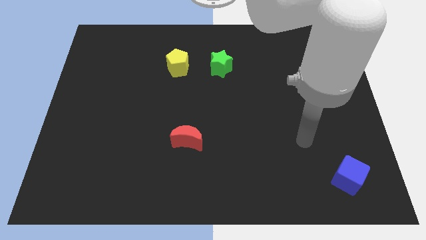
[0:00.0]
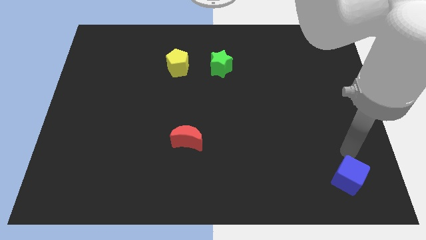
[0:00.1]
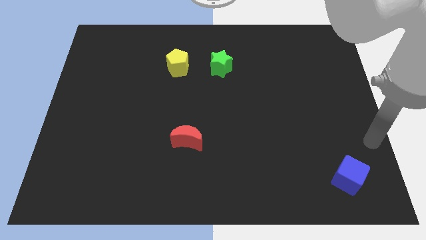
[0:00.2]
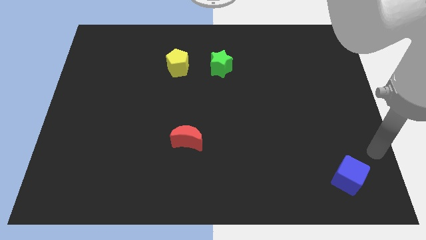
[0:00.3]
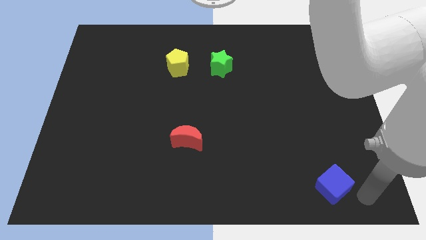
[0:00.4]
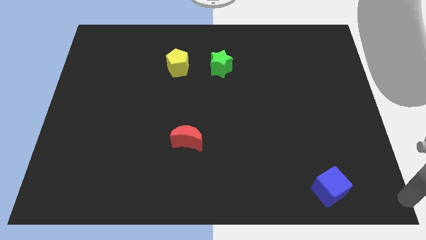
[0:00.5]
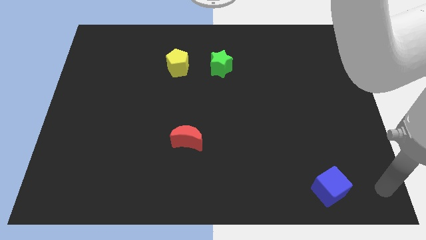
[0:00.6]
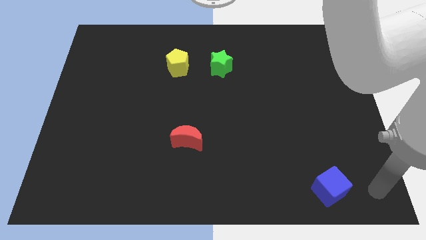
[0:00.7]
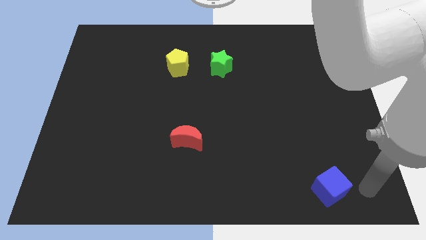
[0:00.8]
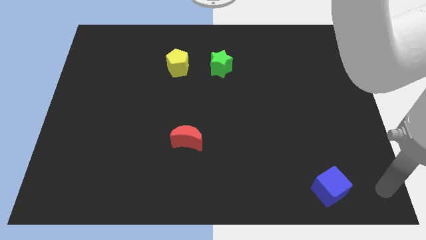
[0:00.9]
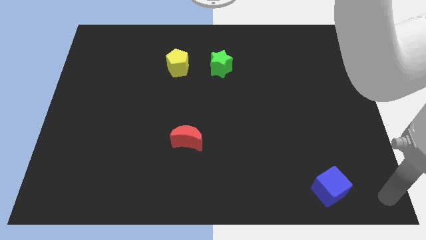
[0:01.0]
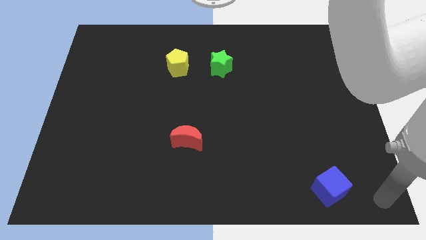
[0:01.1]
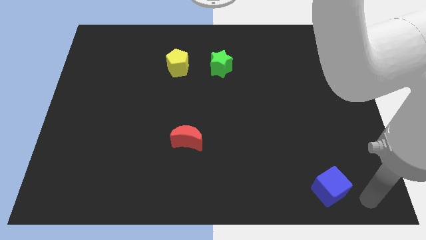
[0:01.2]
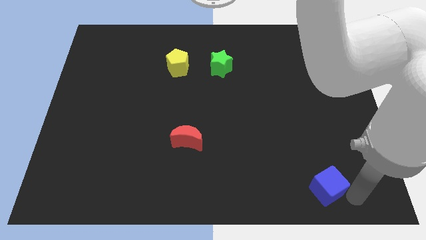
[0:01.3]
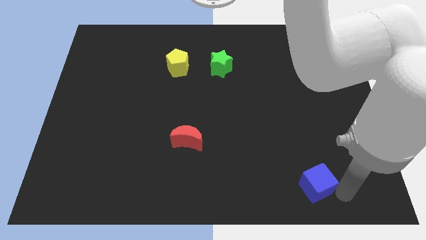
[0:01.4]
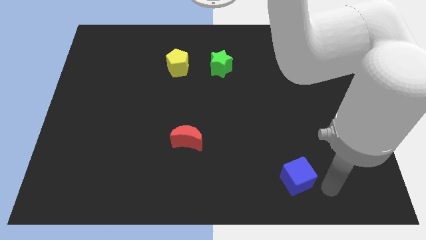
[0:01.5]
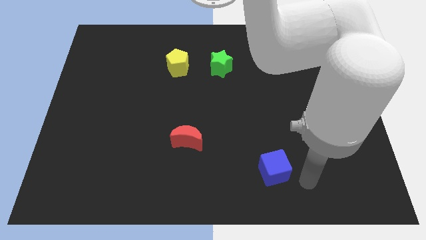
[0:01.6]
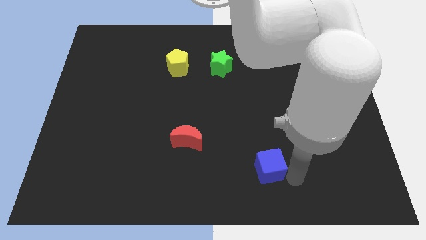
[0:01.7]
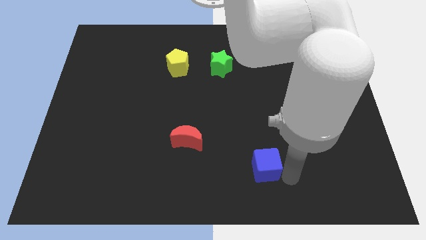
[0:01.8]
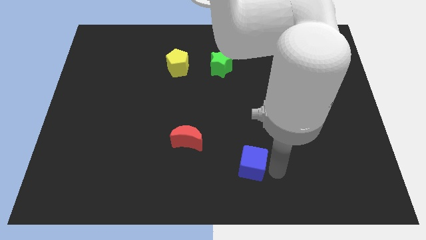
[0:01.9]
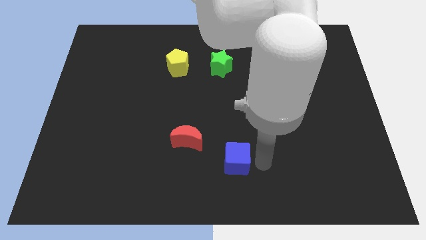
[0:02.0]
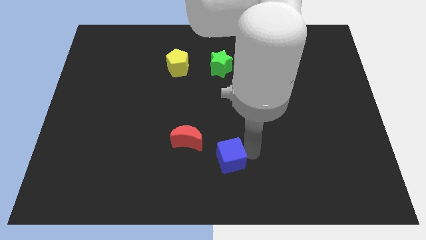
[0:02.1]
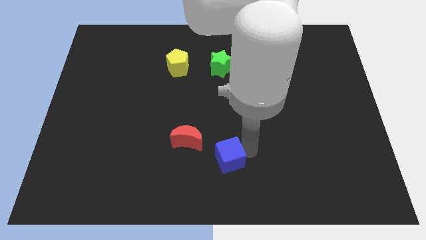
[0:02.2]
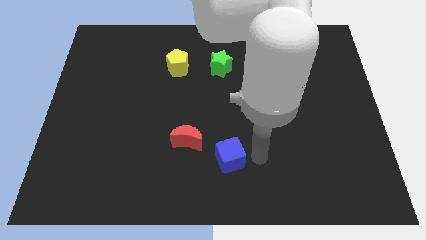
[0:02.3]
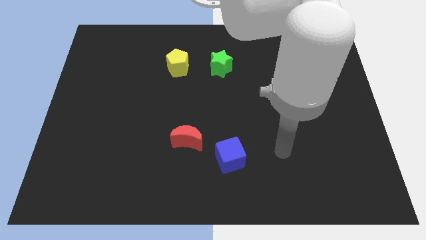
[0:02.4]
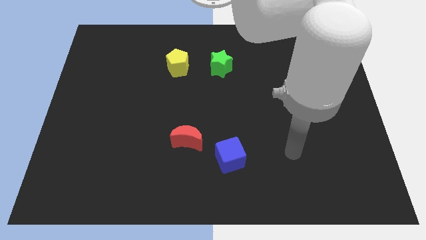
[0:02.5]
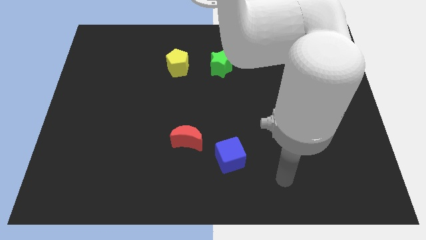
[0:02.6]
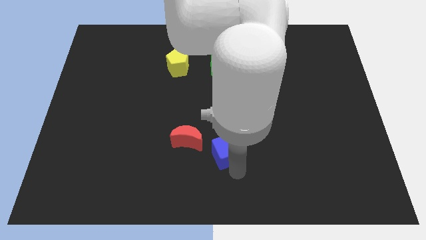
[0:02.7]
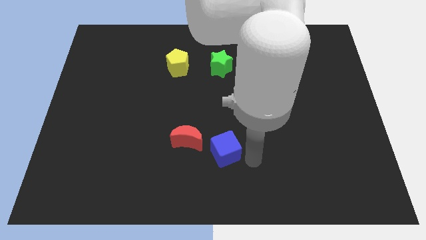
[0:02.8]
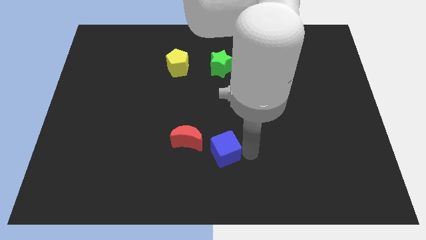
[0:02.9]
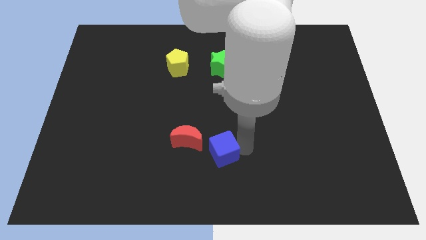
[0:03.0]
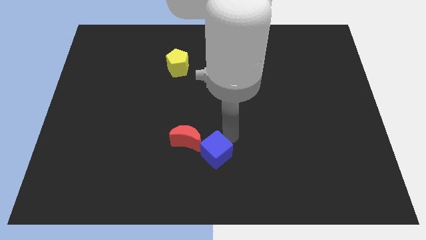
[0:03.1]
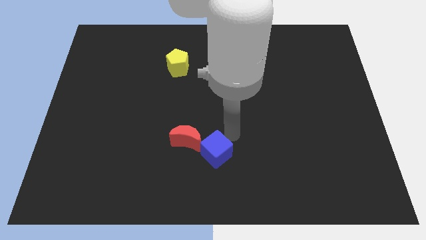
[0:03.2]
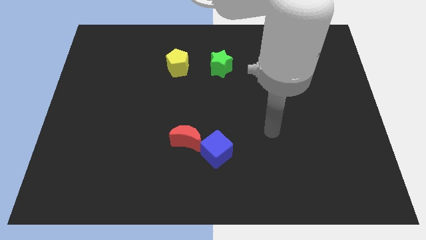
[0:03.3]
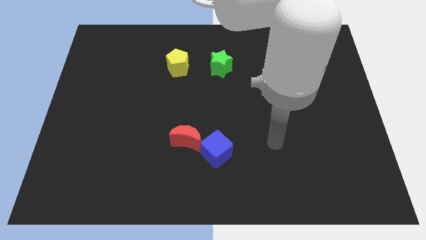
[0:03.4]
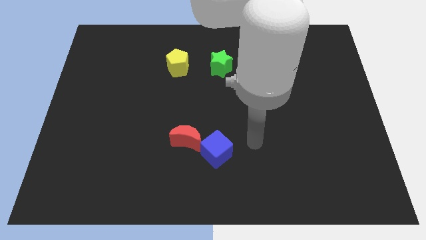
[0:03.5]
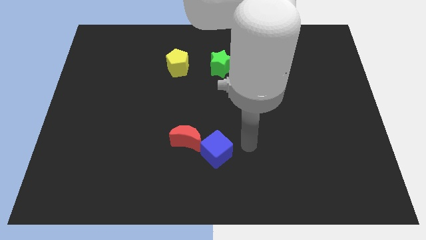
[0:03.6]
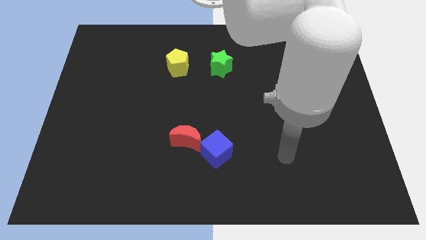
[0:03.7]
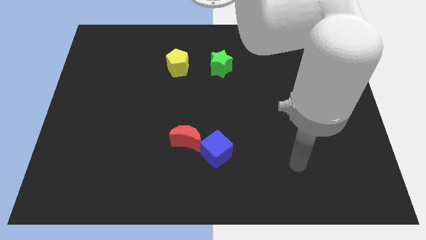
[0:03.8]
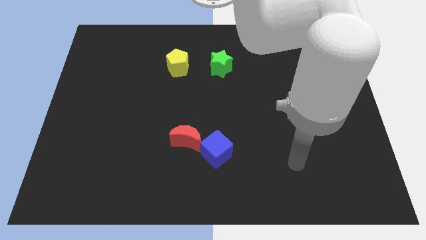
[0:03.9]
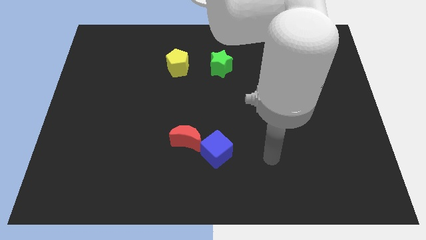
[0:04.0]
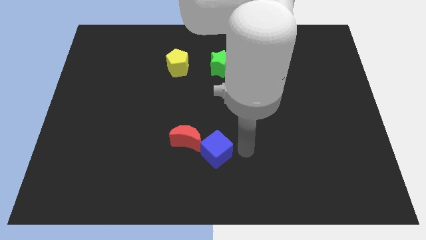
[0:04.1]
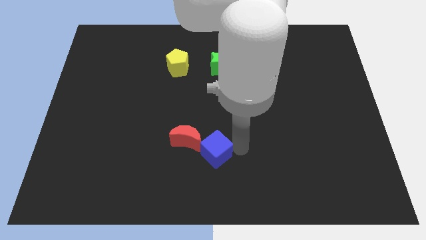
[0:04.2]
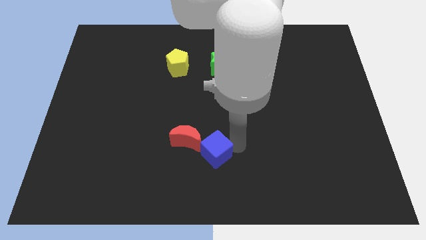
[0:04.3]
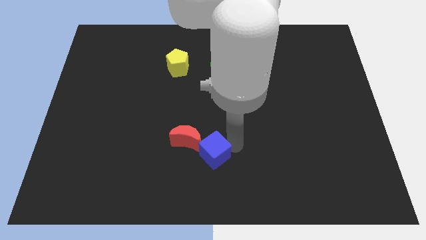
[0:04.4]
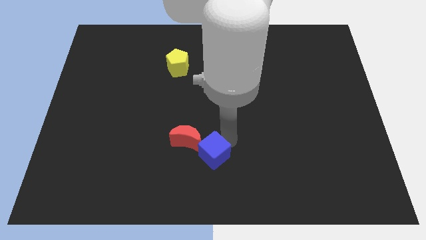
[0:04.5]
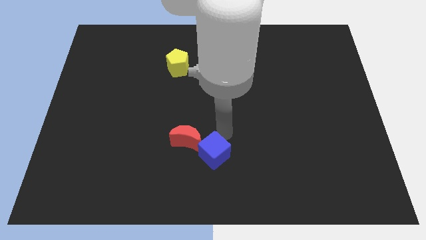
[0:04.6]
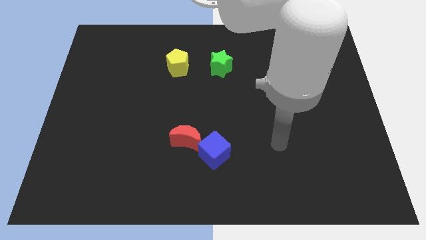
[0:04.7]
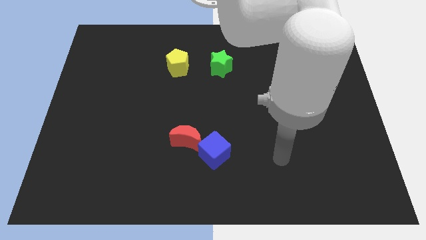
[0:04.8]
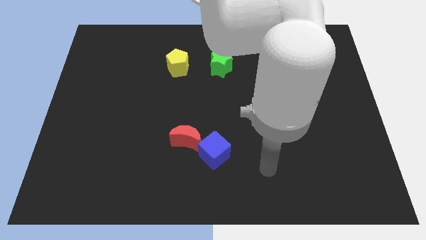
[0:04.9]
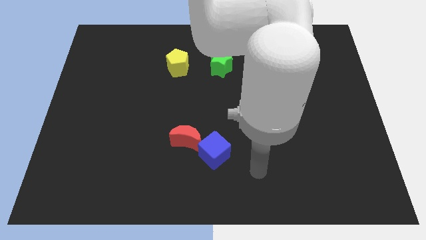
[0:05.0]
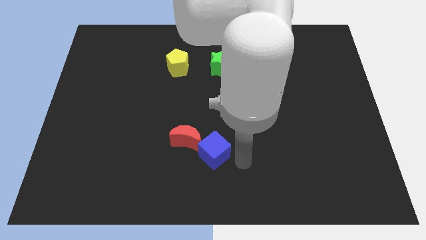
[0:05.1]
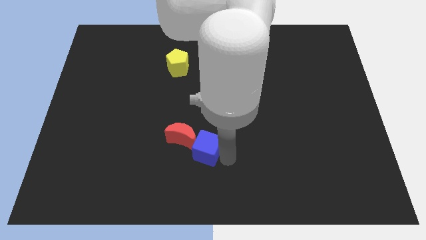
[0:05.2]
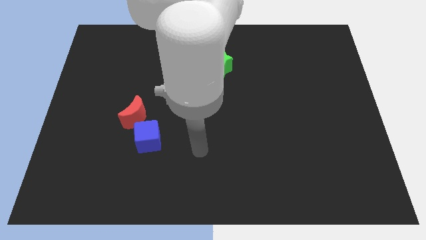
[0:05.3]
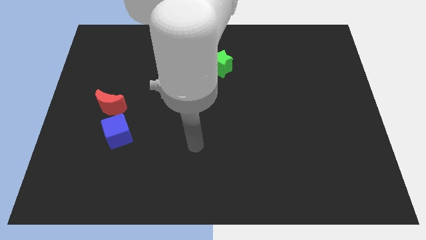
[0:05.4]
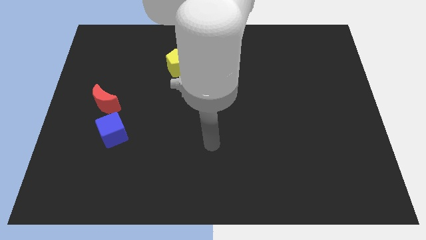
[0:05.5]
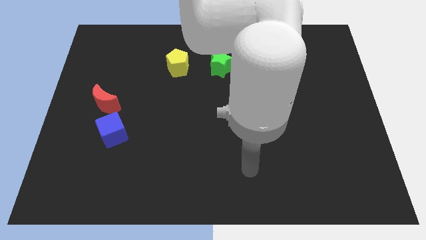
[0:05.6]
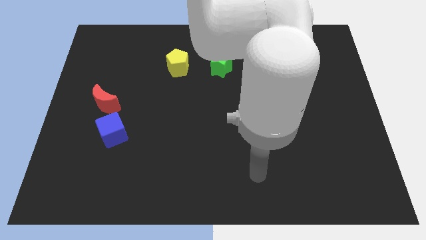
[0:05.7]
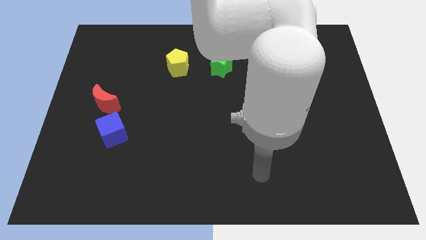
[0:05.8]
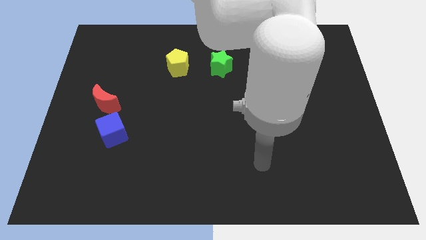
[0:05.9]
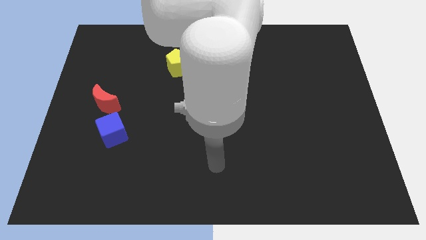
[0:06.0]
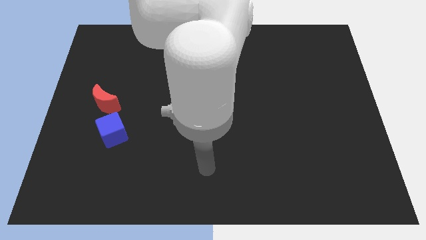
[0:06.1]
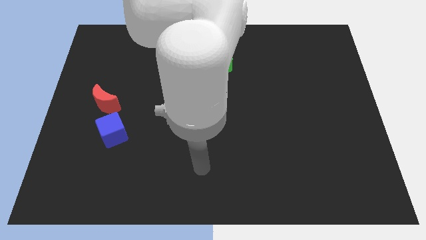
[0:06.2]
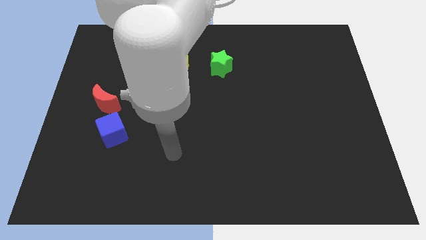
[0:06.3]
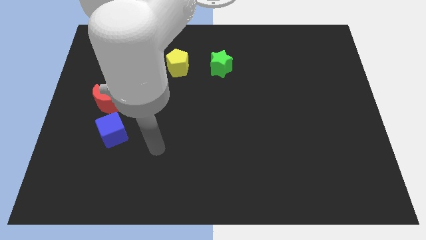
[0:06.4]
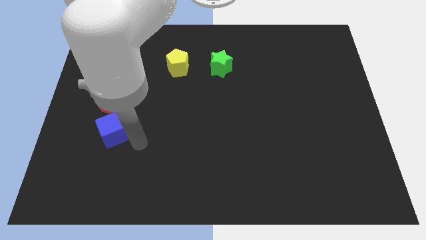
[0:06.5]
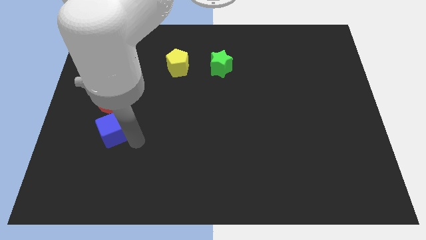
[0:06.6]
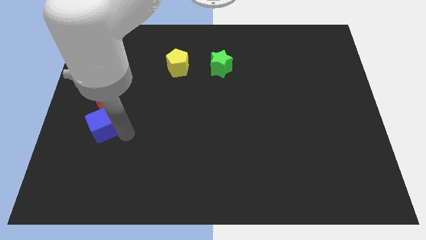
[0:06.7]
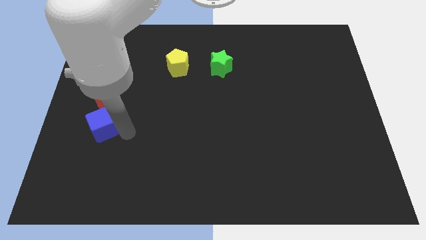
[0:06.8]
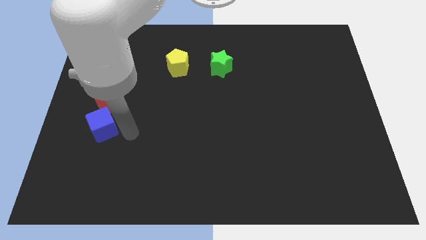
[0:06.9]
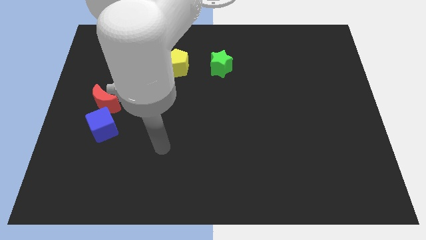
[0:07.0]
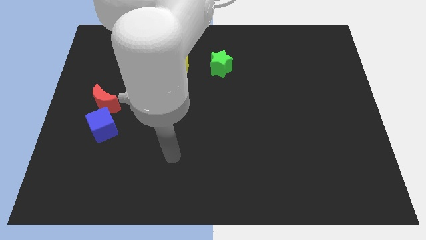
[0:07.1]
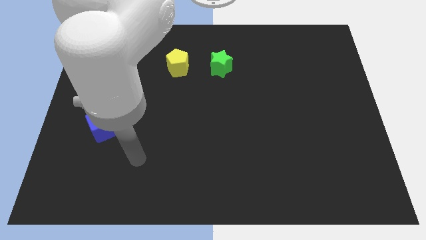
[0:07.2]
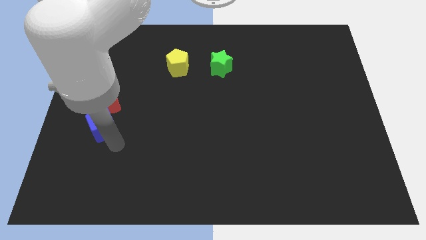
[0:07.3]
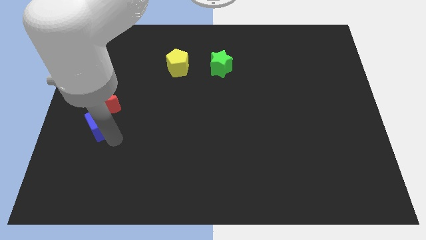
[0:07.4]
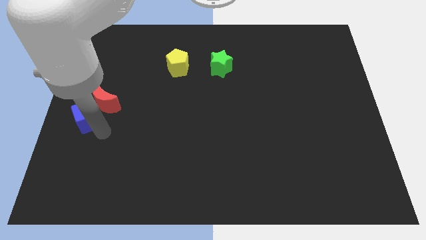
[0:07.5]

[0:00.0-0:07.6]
put the blue block towards the moon

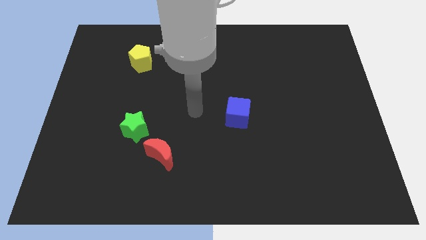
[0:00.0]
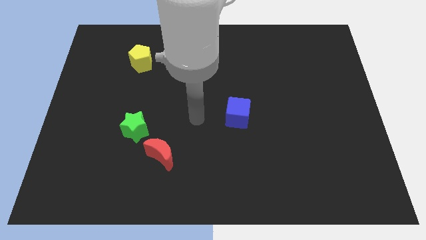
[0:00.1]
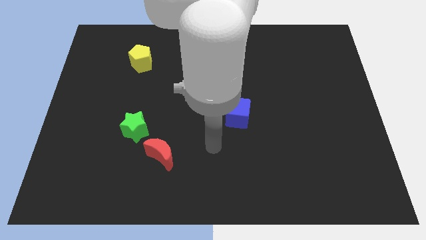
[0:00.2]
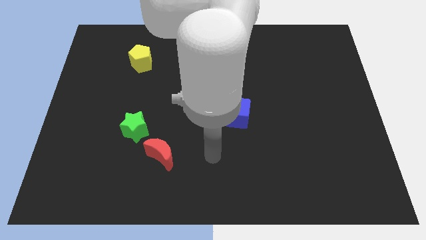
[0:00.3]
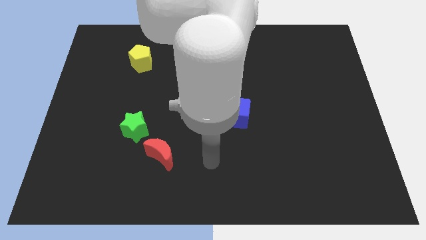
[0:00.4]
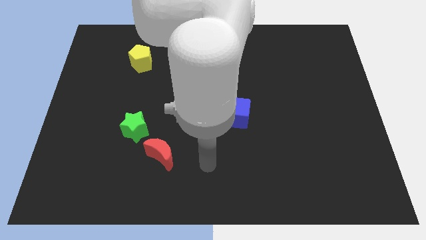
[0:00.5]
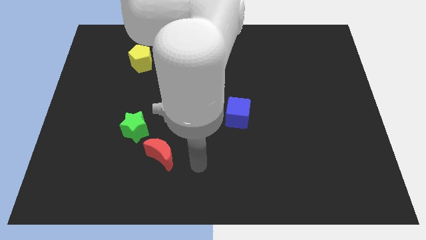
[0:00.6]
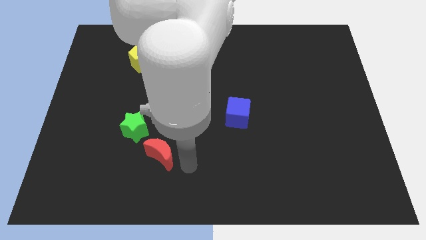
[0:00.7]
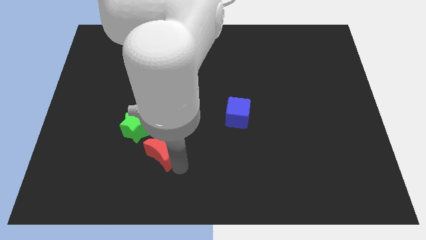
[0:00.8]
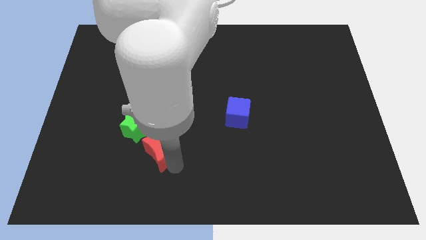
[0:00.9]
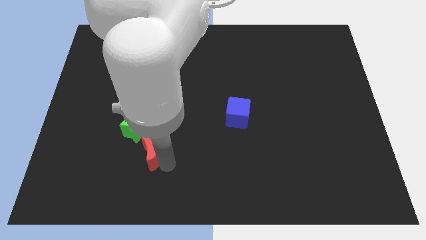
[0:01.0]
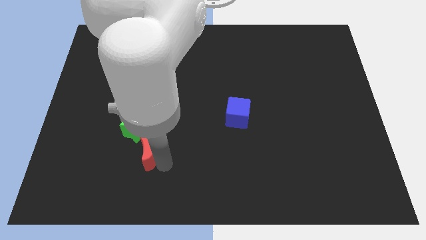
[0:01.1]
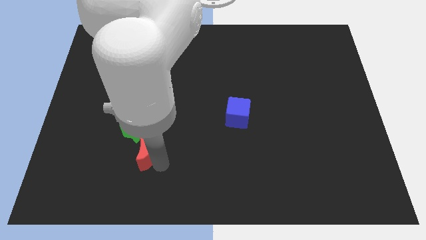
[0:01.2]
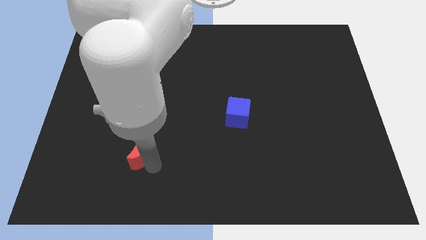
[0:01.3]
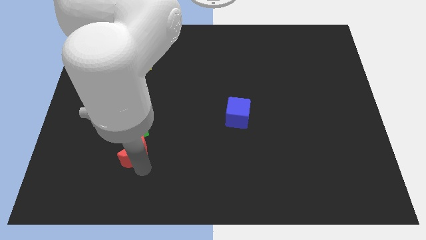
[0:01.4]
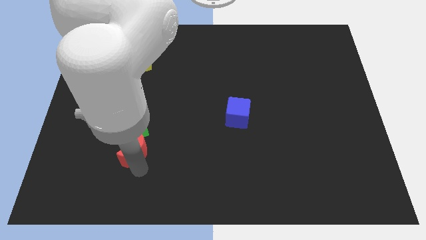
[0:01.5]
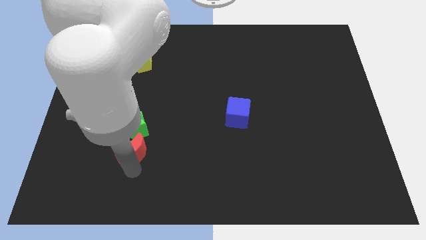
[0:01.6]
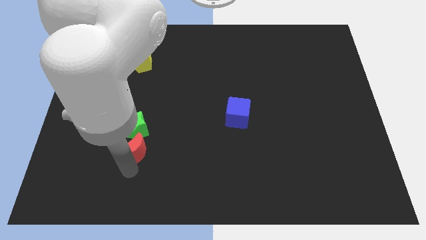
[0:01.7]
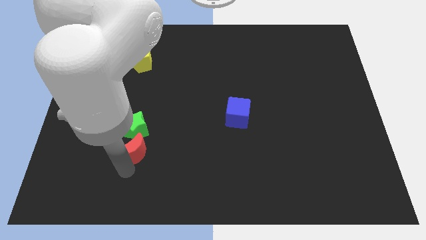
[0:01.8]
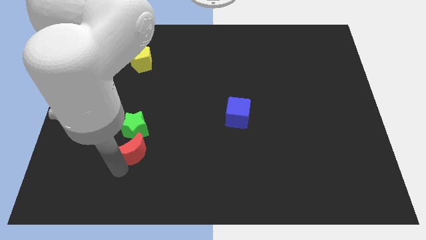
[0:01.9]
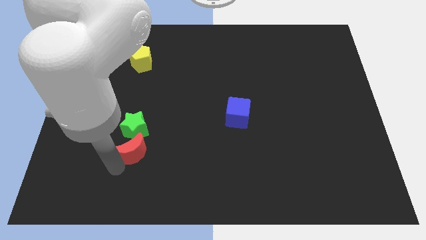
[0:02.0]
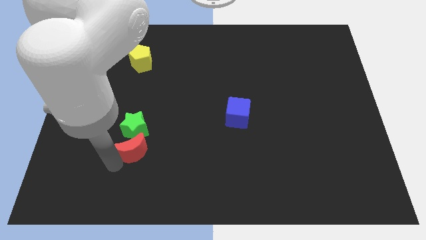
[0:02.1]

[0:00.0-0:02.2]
slide the red block to the green star
